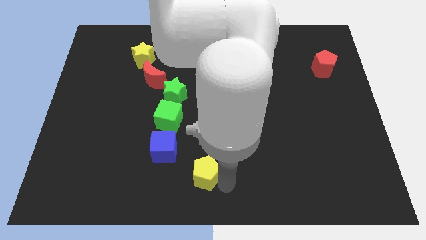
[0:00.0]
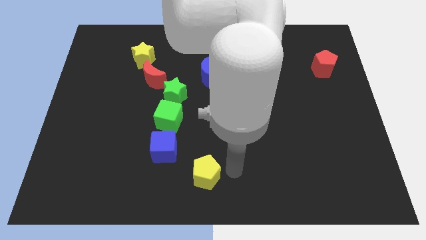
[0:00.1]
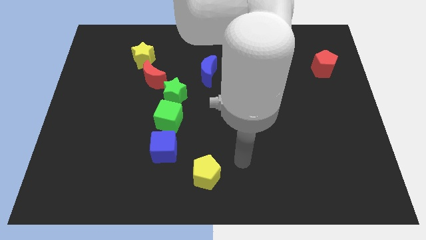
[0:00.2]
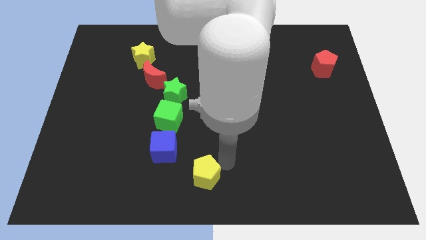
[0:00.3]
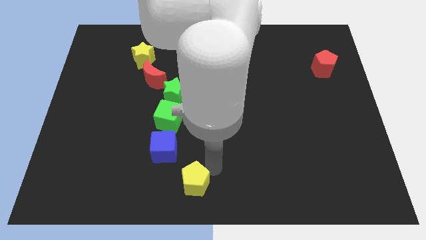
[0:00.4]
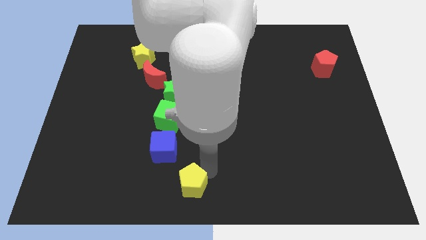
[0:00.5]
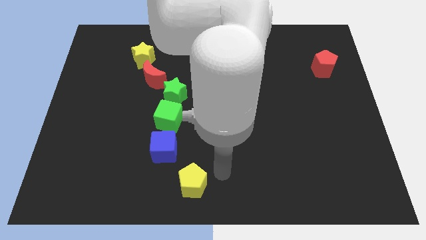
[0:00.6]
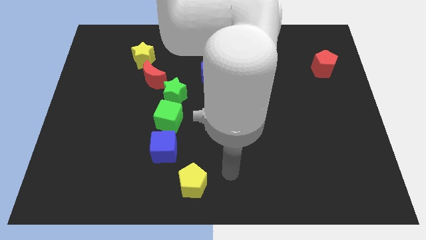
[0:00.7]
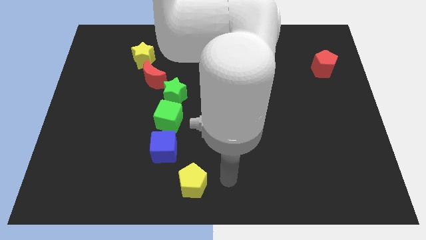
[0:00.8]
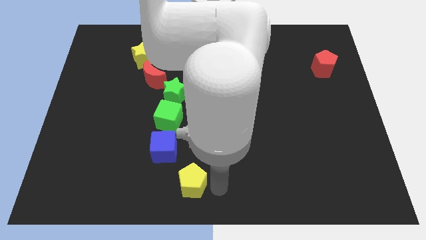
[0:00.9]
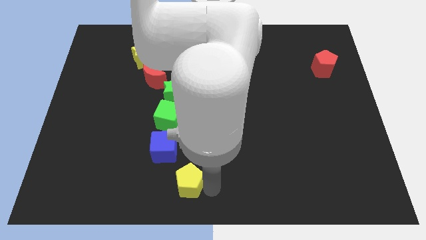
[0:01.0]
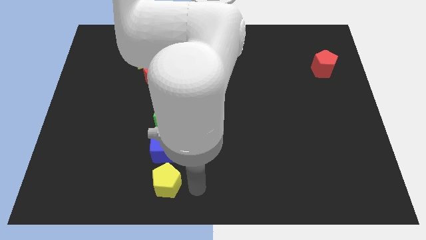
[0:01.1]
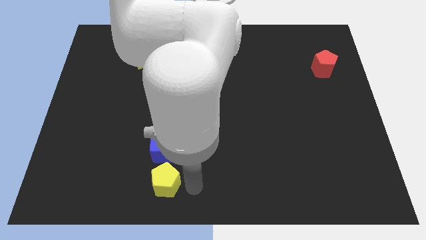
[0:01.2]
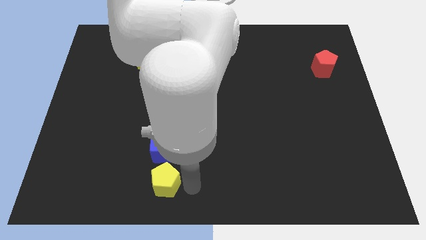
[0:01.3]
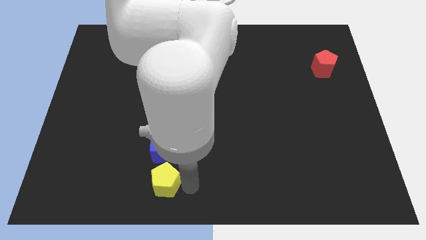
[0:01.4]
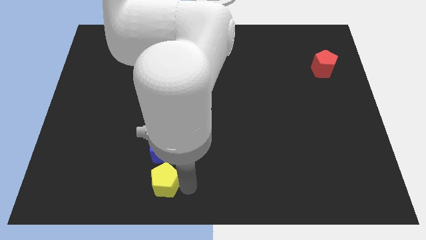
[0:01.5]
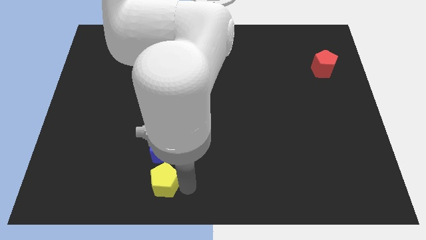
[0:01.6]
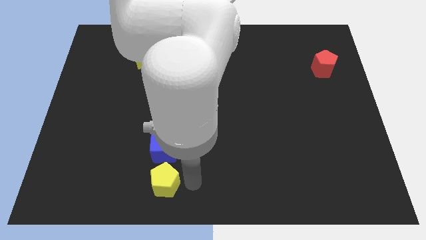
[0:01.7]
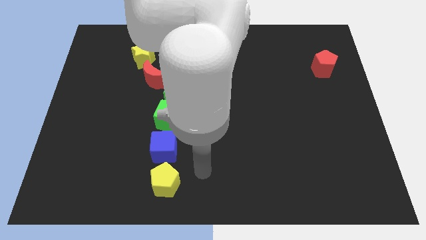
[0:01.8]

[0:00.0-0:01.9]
place the yellow pentagon to the bottom side of the blue cube

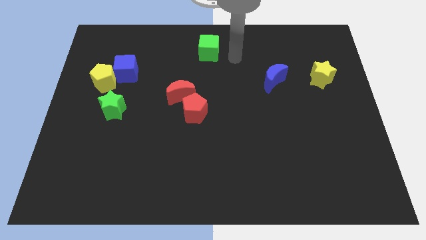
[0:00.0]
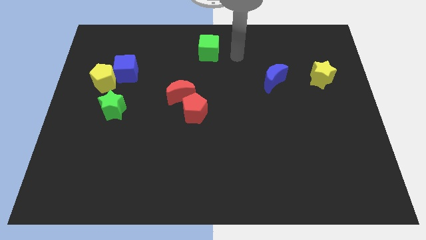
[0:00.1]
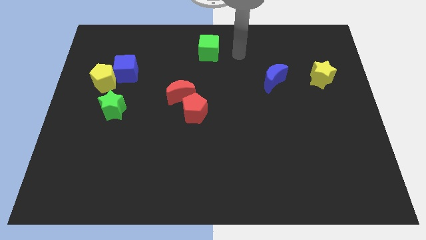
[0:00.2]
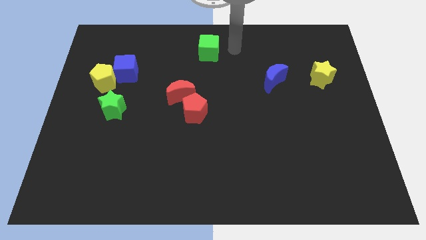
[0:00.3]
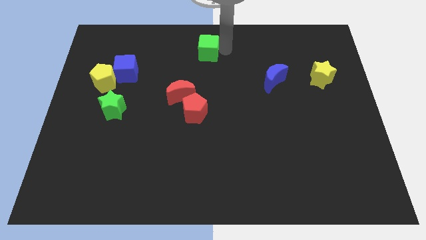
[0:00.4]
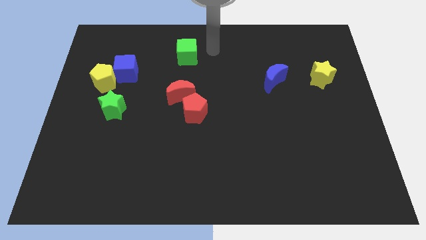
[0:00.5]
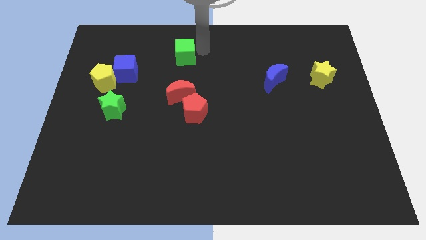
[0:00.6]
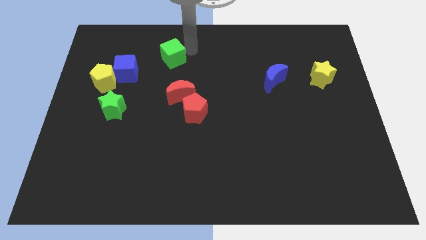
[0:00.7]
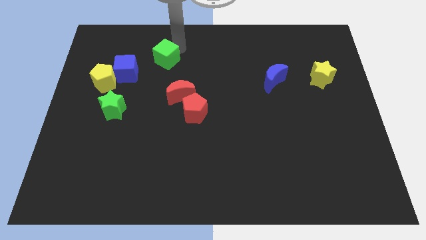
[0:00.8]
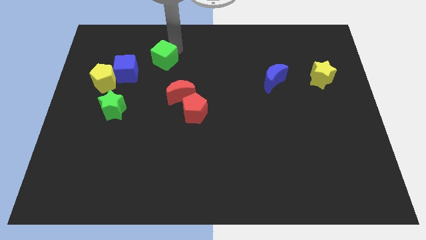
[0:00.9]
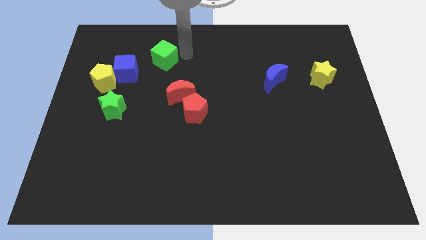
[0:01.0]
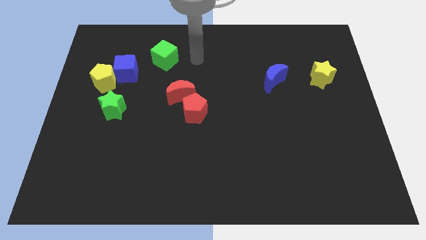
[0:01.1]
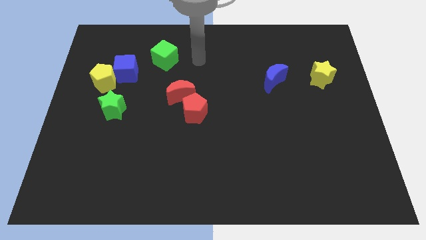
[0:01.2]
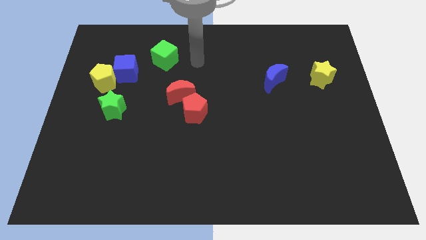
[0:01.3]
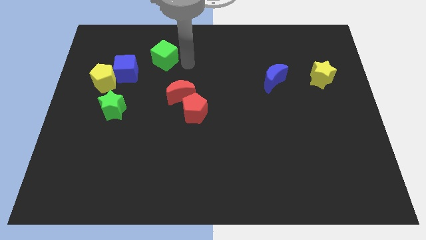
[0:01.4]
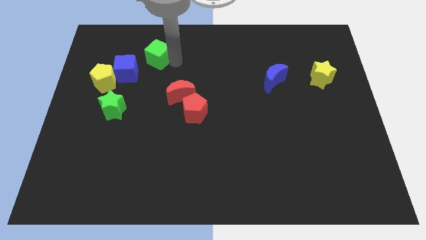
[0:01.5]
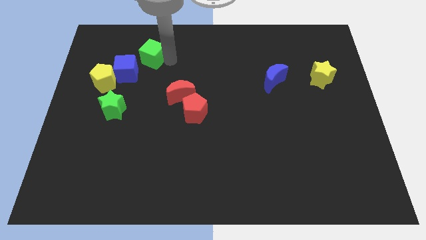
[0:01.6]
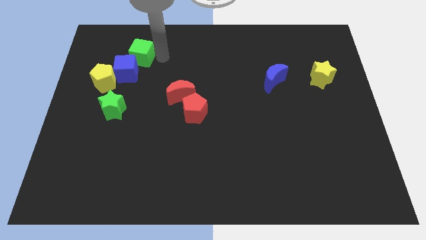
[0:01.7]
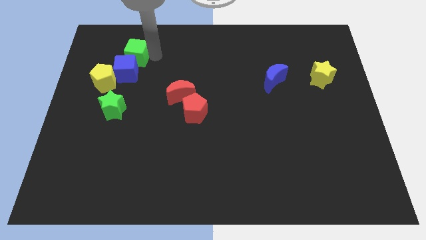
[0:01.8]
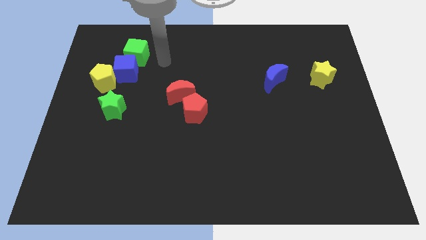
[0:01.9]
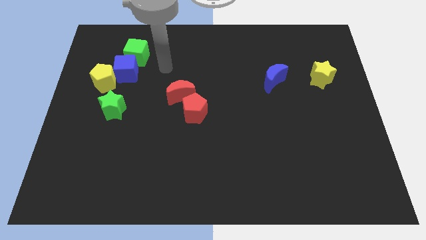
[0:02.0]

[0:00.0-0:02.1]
move the green cube into the blue cube

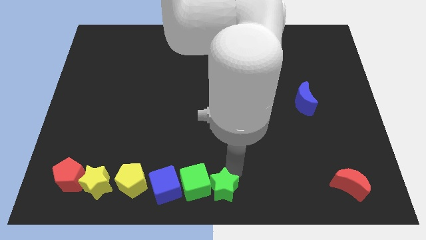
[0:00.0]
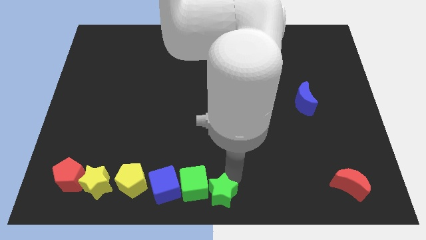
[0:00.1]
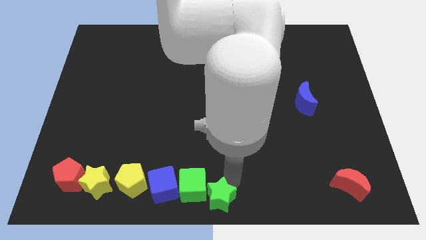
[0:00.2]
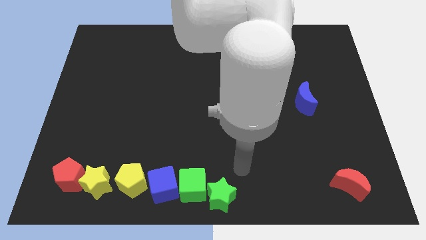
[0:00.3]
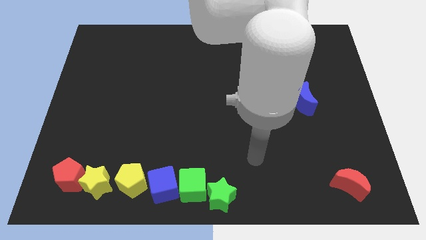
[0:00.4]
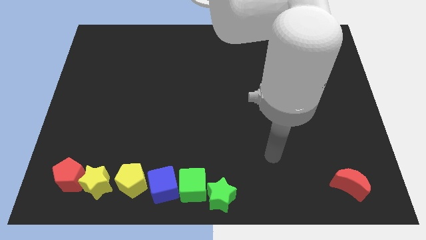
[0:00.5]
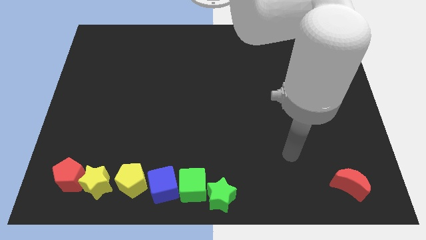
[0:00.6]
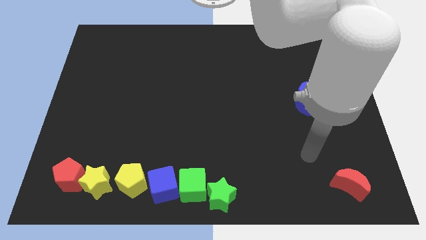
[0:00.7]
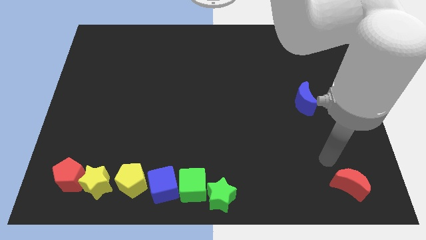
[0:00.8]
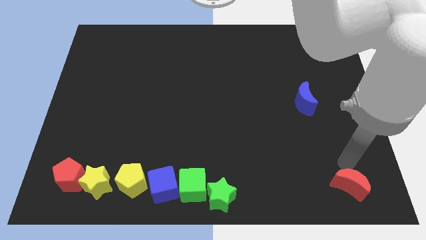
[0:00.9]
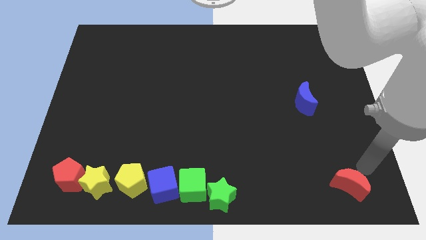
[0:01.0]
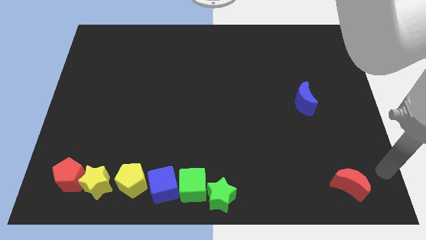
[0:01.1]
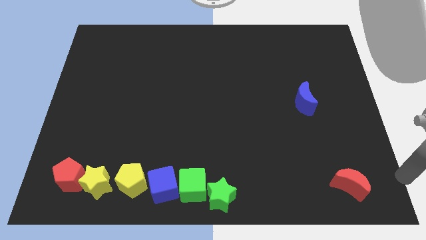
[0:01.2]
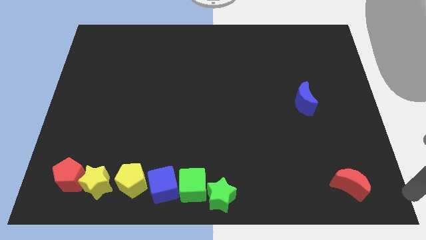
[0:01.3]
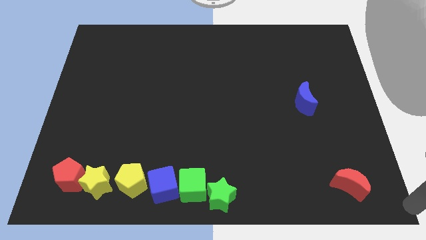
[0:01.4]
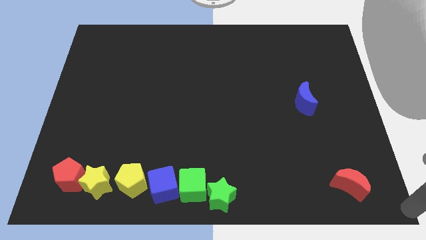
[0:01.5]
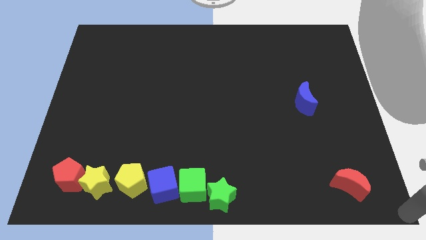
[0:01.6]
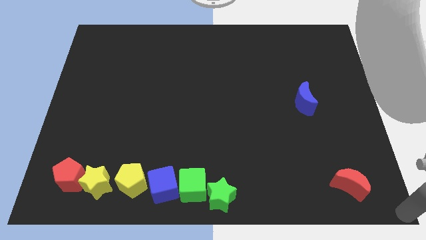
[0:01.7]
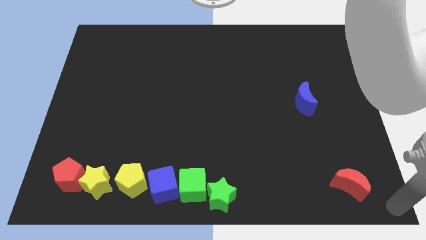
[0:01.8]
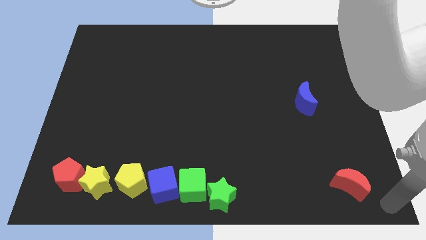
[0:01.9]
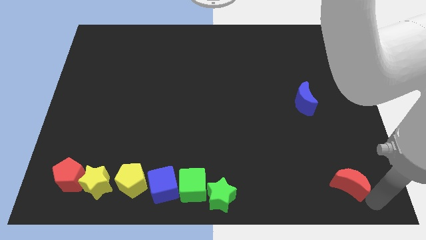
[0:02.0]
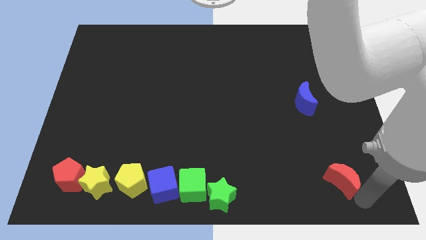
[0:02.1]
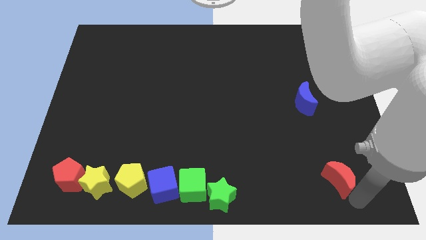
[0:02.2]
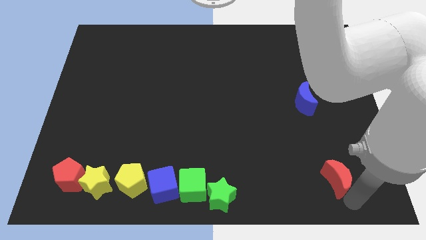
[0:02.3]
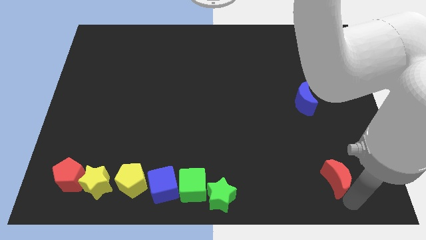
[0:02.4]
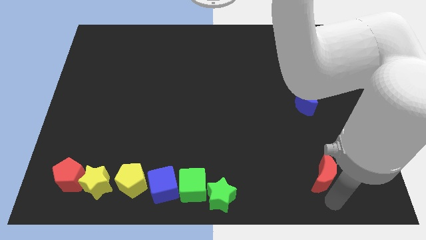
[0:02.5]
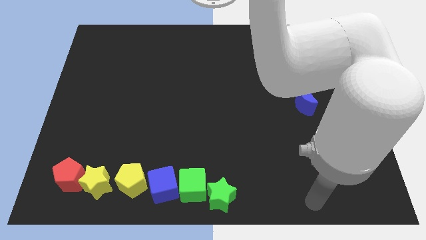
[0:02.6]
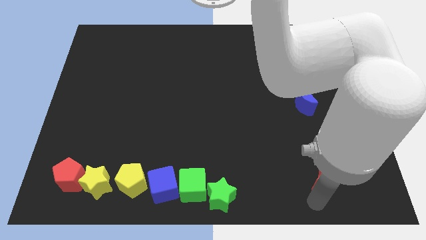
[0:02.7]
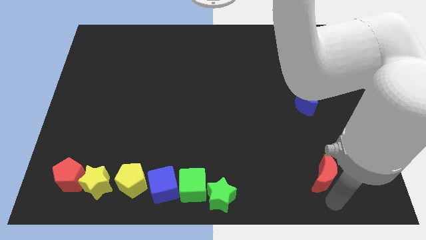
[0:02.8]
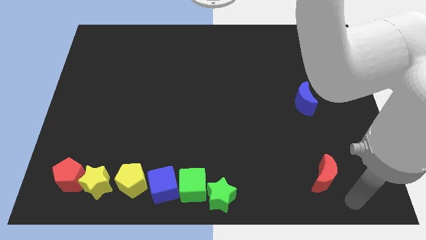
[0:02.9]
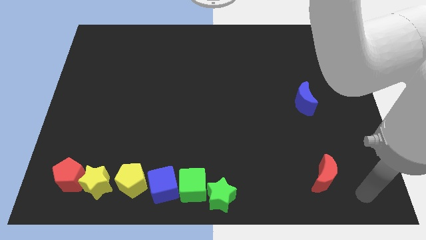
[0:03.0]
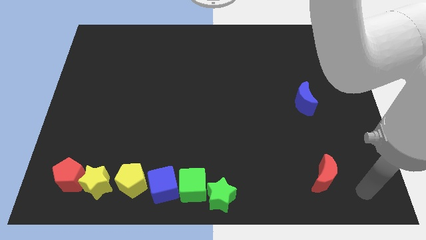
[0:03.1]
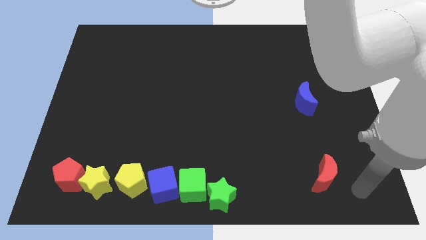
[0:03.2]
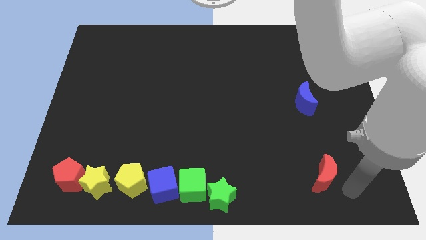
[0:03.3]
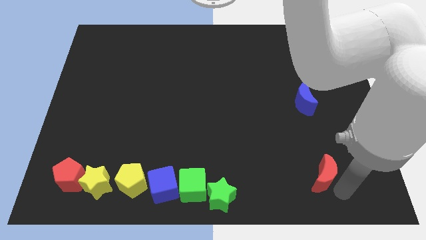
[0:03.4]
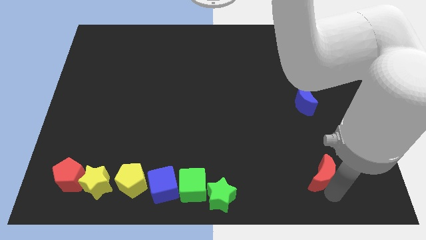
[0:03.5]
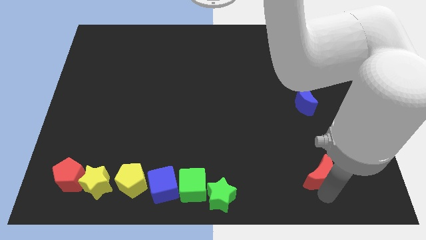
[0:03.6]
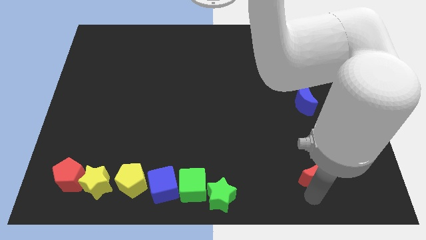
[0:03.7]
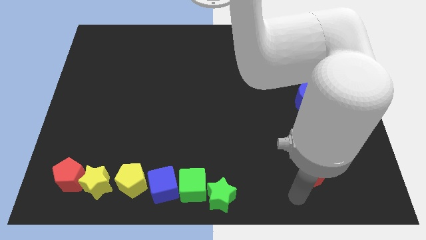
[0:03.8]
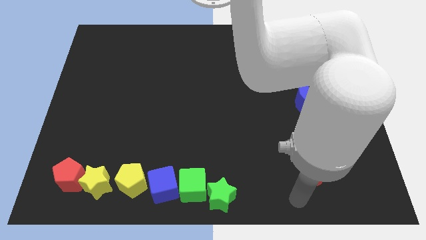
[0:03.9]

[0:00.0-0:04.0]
push the red moon slightly upwards

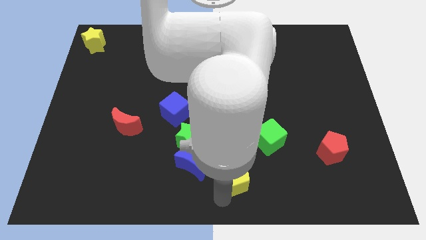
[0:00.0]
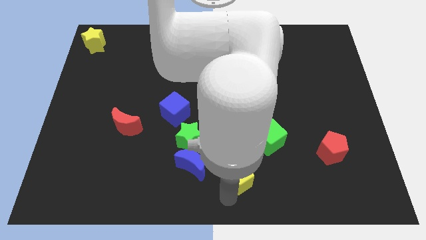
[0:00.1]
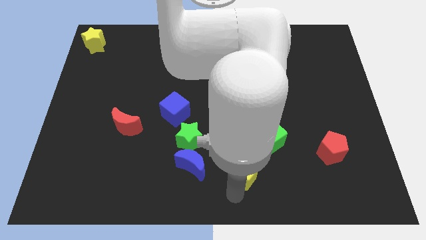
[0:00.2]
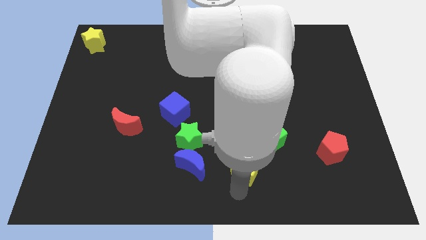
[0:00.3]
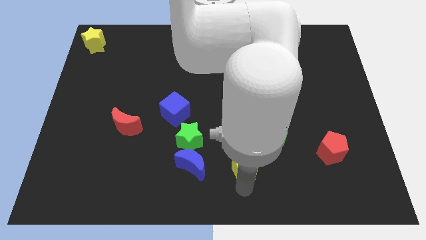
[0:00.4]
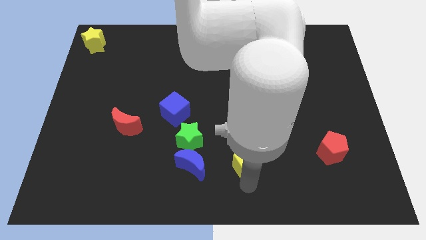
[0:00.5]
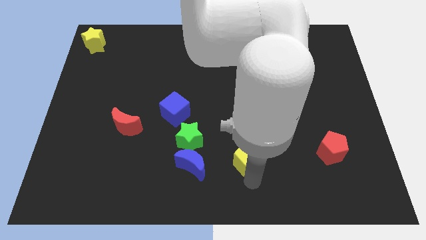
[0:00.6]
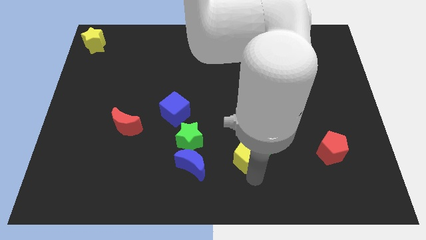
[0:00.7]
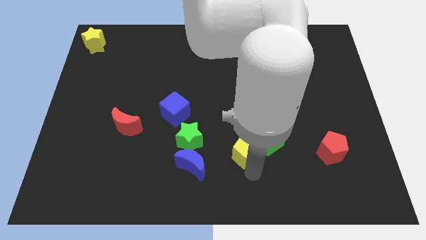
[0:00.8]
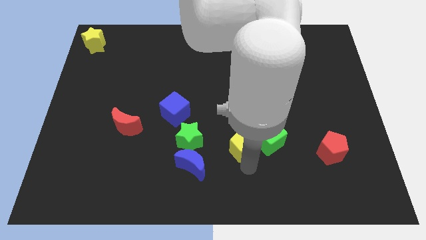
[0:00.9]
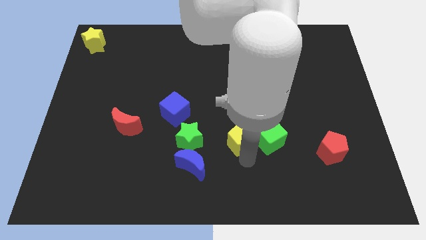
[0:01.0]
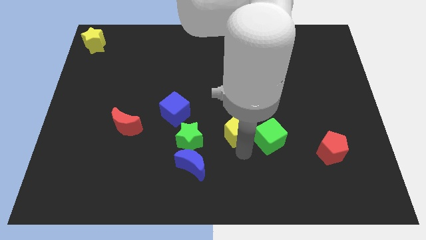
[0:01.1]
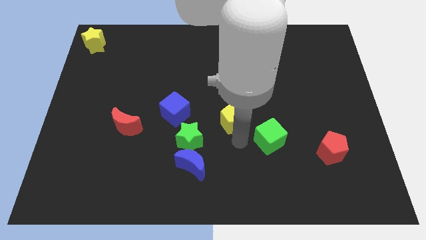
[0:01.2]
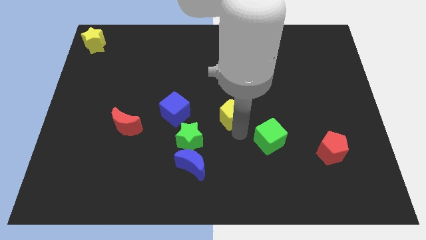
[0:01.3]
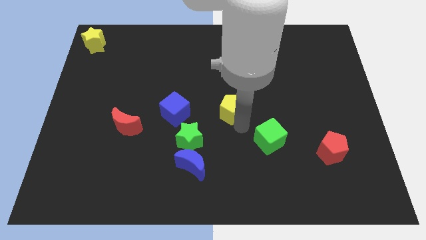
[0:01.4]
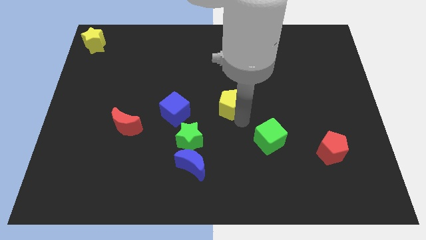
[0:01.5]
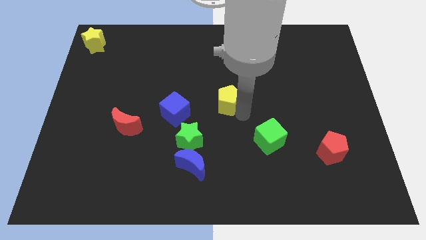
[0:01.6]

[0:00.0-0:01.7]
place the yellow pentagon to the center of the board
